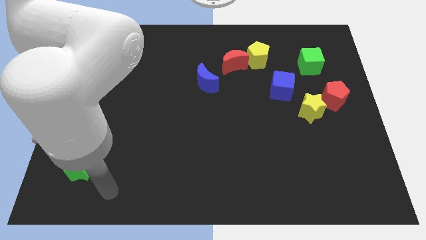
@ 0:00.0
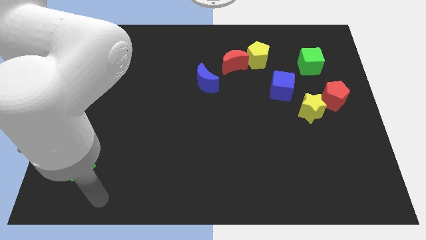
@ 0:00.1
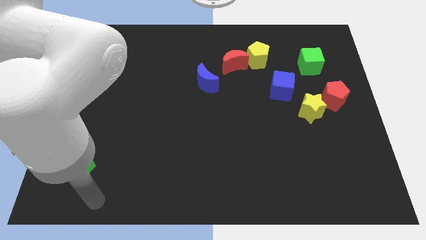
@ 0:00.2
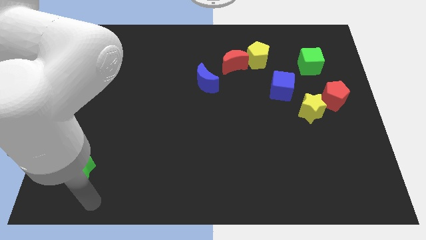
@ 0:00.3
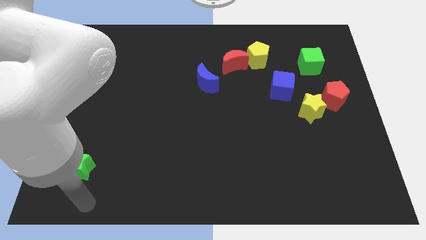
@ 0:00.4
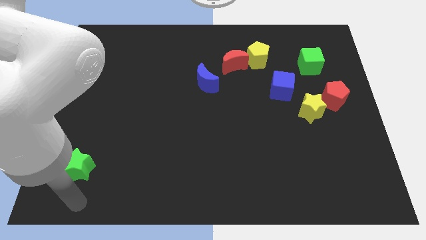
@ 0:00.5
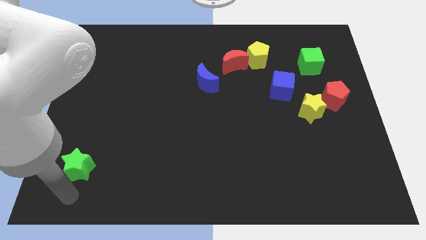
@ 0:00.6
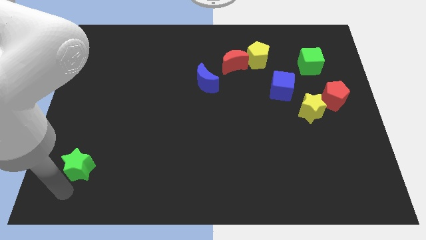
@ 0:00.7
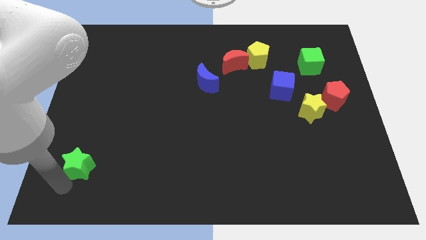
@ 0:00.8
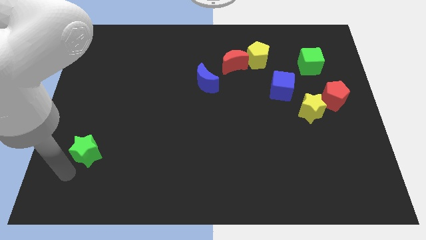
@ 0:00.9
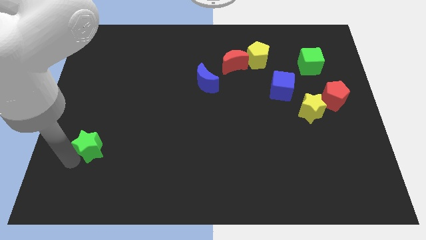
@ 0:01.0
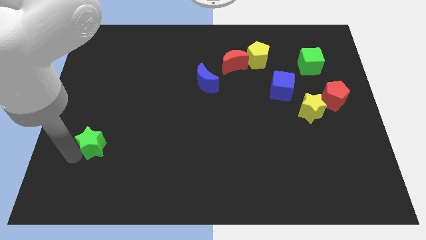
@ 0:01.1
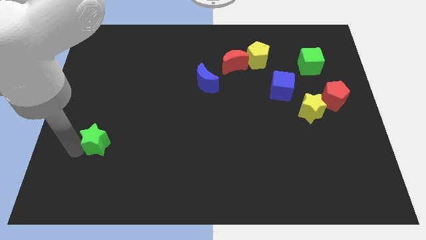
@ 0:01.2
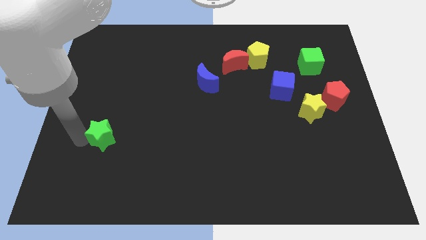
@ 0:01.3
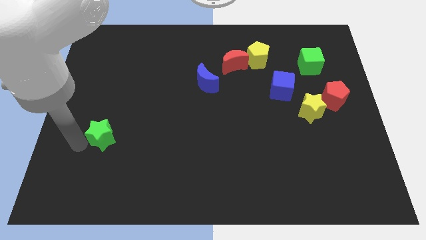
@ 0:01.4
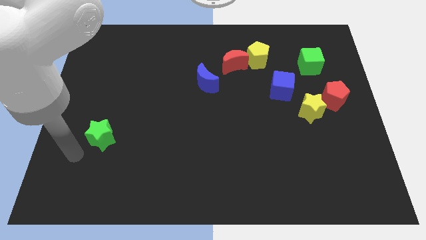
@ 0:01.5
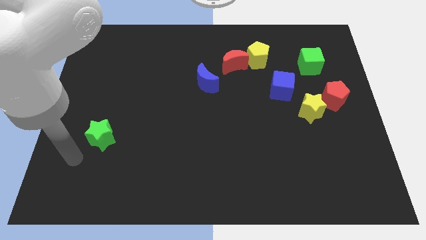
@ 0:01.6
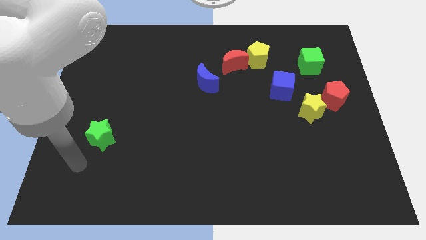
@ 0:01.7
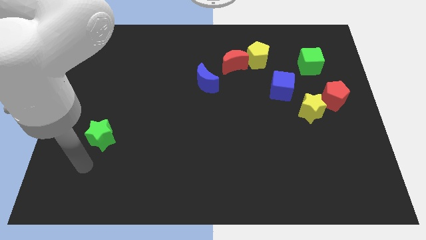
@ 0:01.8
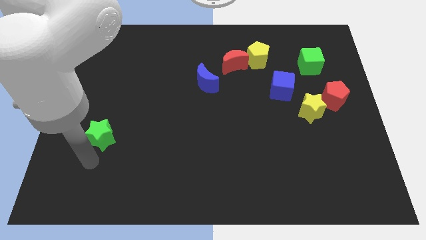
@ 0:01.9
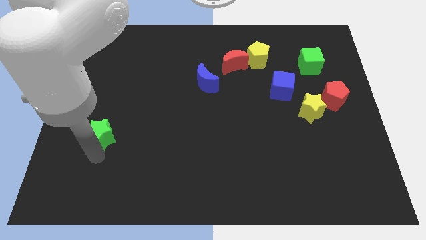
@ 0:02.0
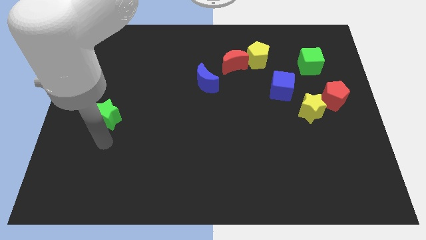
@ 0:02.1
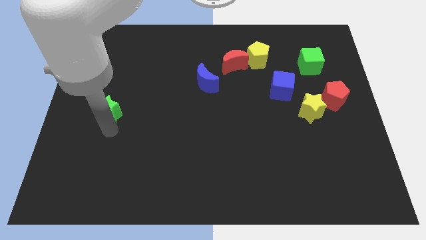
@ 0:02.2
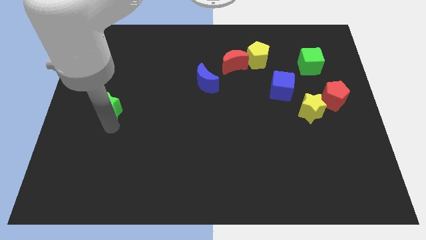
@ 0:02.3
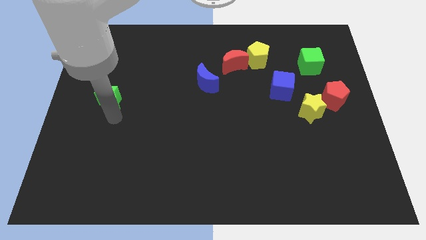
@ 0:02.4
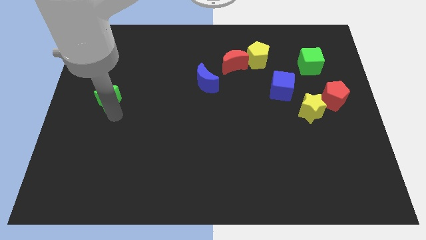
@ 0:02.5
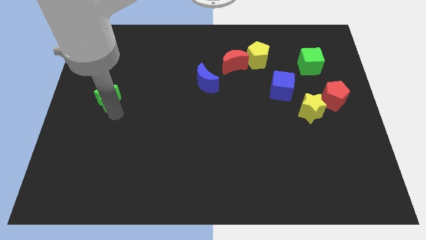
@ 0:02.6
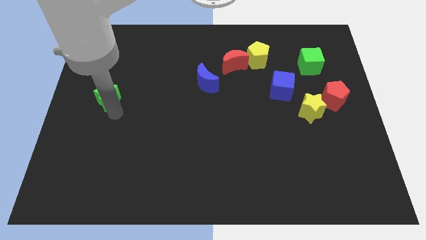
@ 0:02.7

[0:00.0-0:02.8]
push the green star to the left center of the board

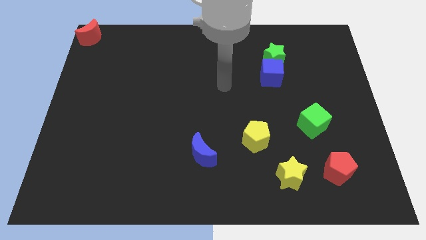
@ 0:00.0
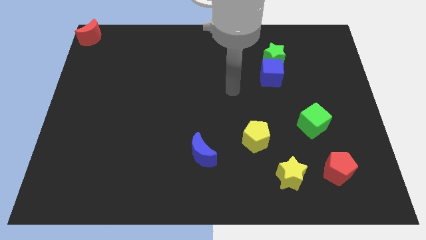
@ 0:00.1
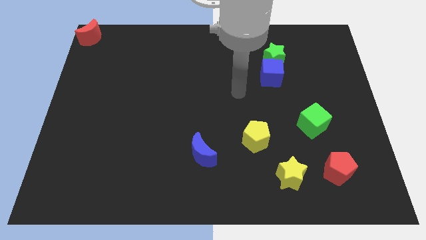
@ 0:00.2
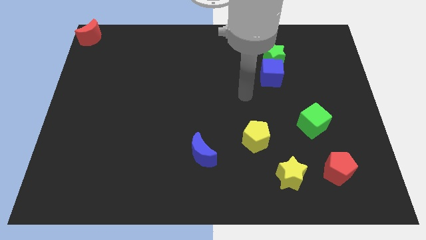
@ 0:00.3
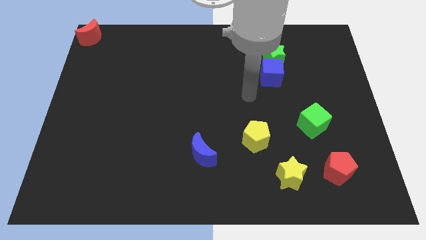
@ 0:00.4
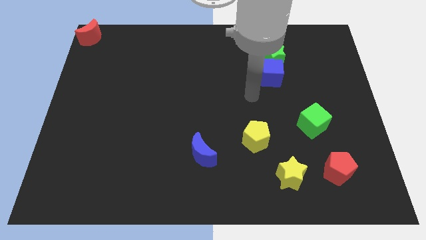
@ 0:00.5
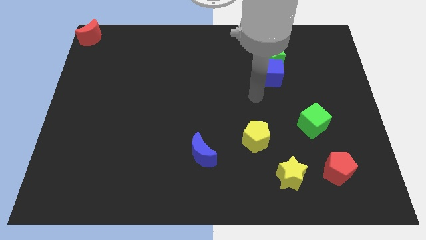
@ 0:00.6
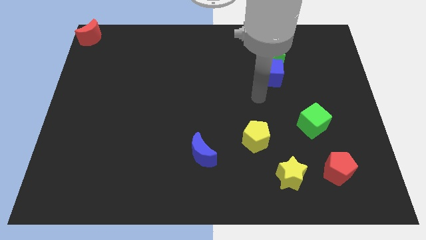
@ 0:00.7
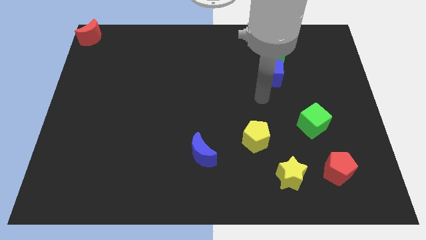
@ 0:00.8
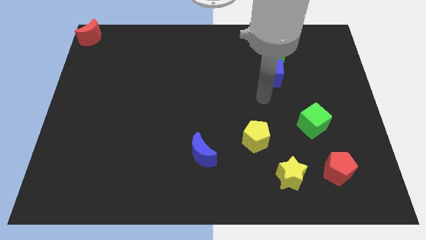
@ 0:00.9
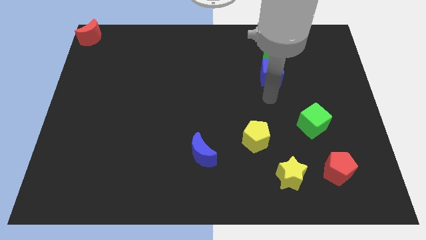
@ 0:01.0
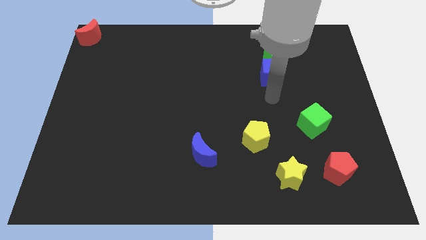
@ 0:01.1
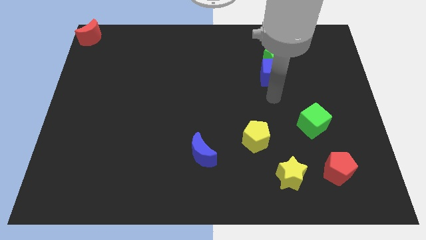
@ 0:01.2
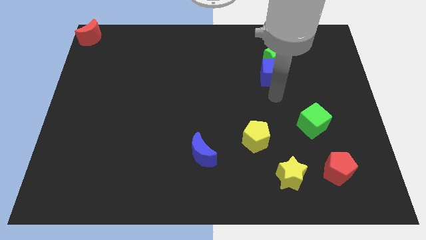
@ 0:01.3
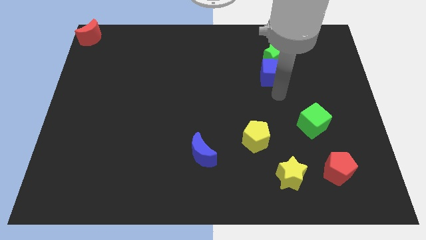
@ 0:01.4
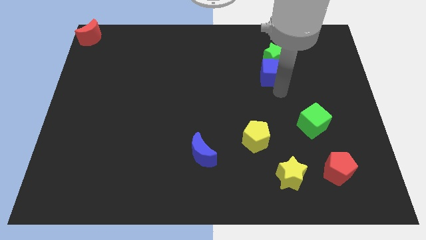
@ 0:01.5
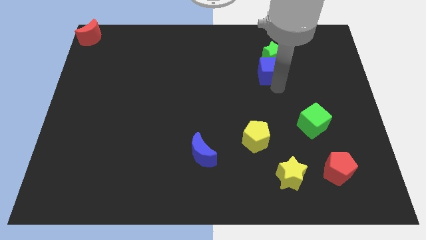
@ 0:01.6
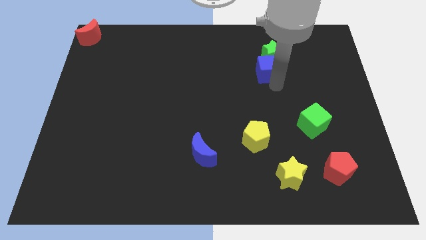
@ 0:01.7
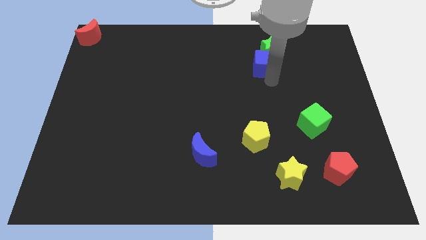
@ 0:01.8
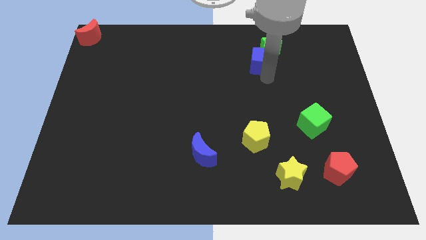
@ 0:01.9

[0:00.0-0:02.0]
move blue cube into green star

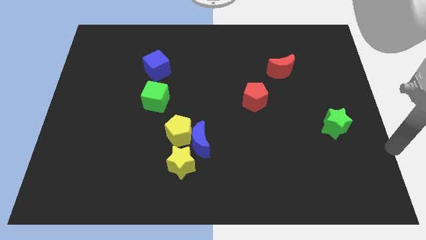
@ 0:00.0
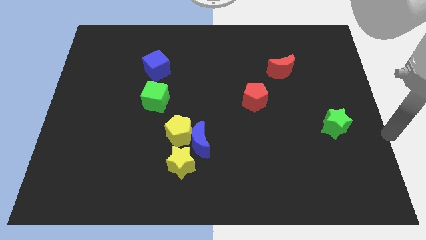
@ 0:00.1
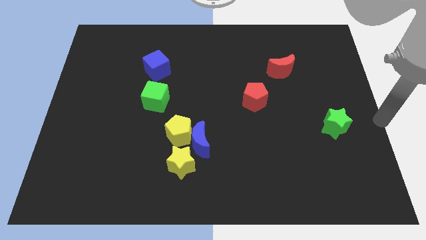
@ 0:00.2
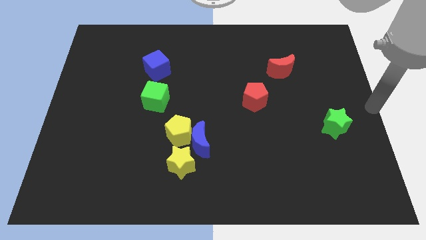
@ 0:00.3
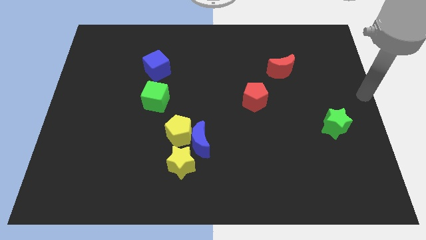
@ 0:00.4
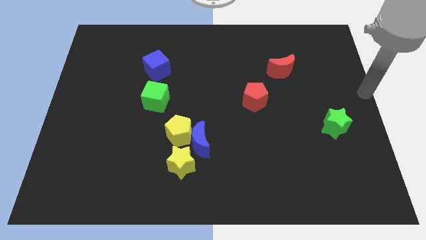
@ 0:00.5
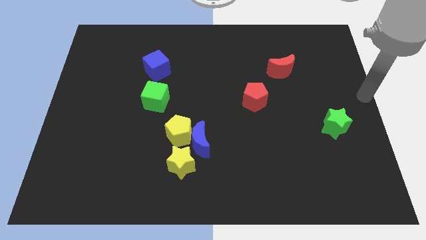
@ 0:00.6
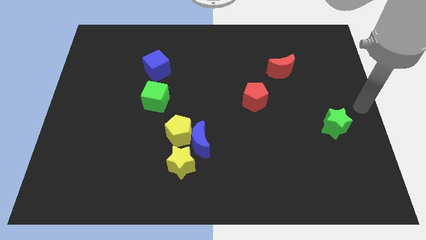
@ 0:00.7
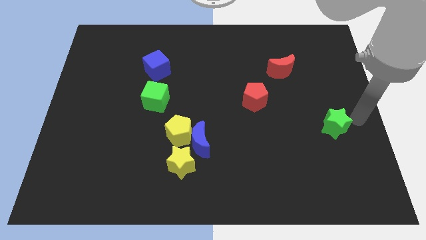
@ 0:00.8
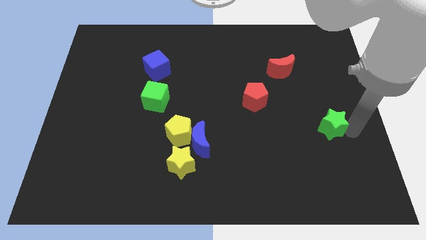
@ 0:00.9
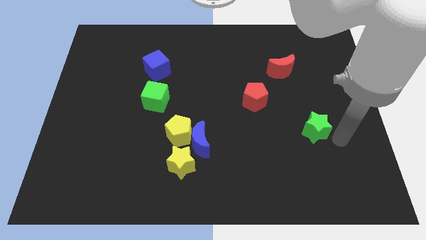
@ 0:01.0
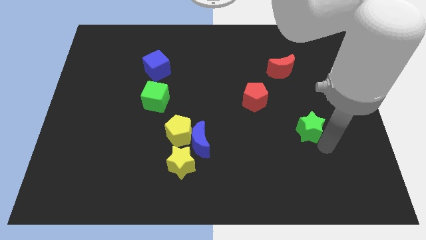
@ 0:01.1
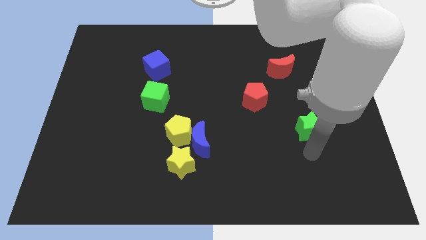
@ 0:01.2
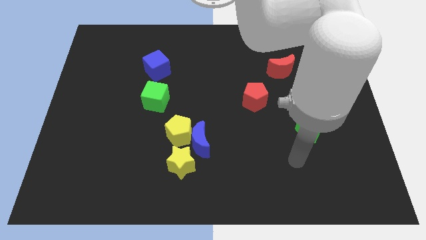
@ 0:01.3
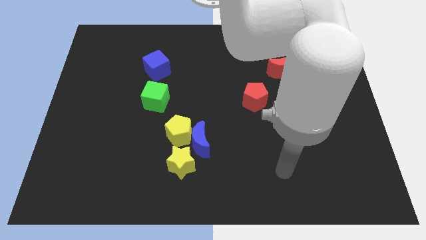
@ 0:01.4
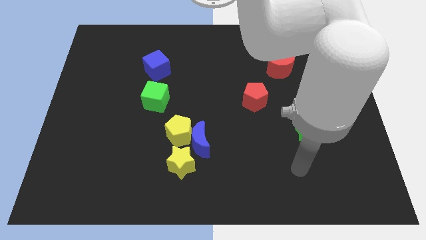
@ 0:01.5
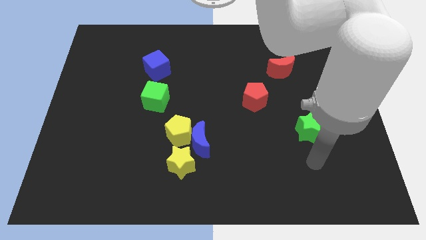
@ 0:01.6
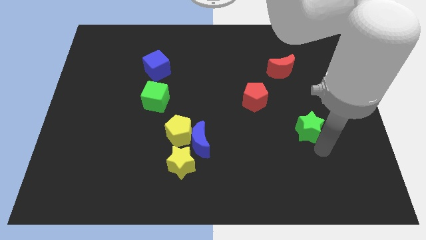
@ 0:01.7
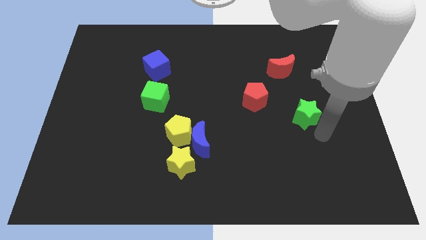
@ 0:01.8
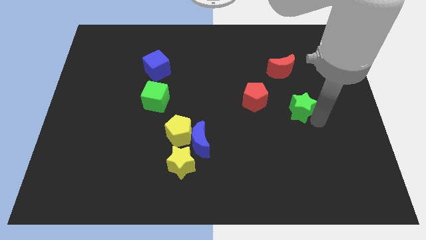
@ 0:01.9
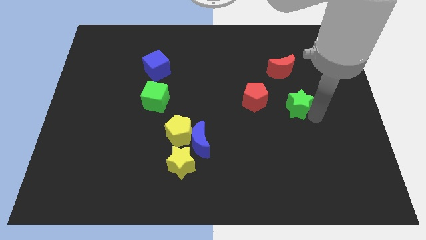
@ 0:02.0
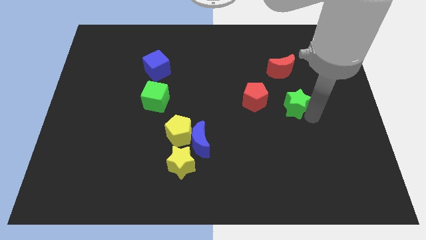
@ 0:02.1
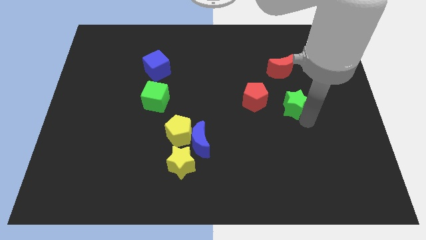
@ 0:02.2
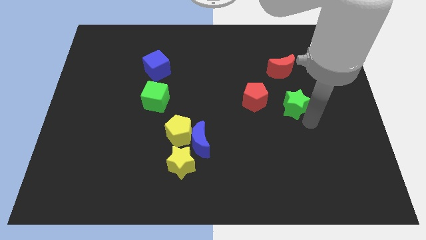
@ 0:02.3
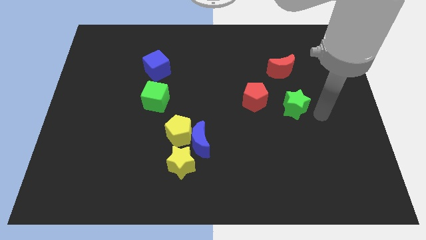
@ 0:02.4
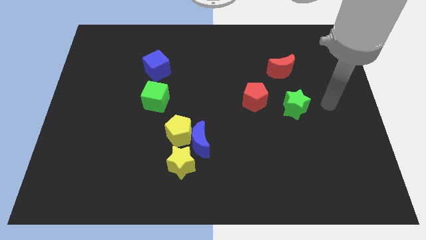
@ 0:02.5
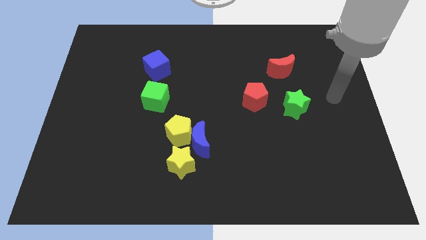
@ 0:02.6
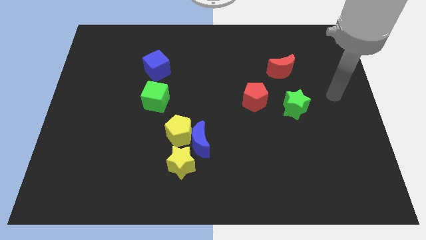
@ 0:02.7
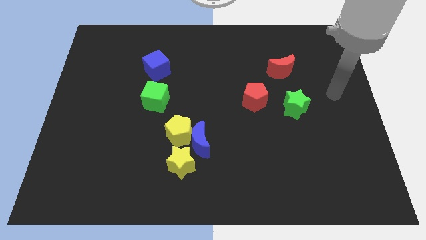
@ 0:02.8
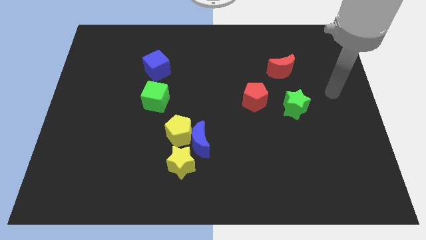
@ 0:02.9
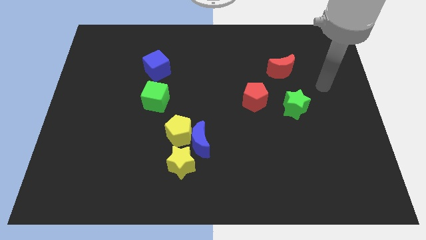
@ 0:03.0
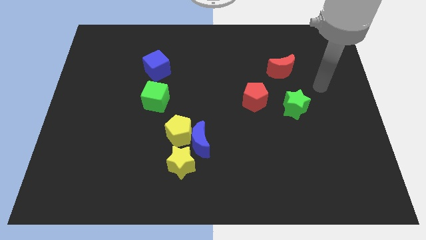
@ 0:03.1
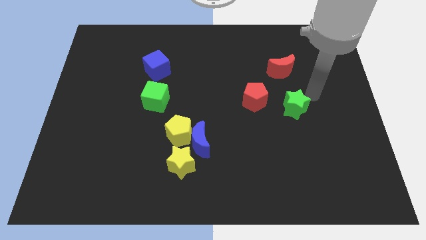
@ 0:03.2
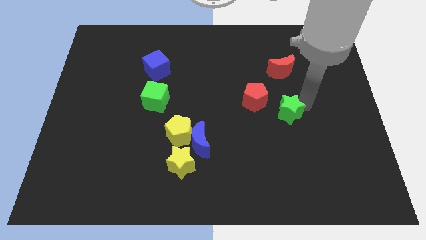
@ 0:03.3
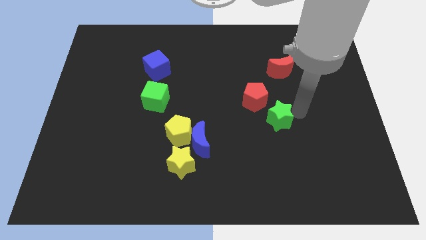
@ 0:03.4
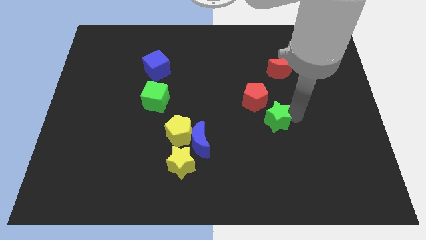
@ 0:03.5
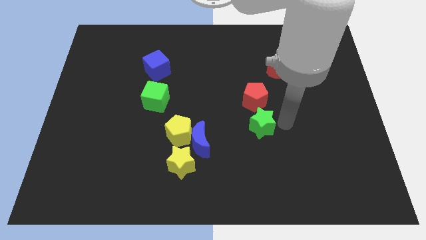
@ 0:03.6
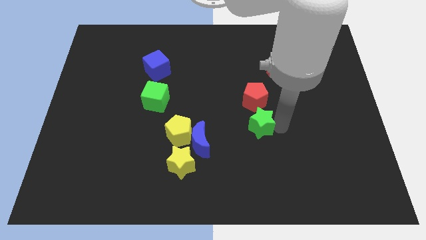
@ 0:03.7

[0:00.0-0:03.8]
place the green star below the red pentagon

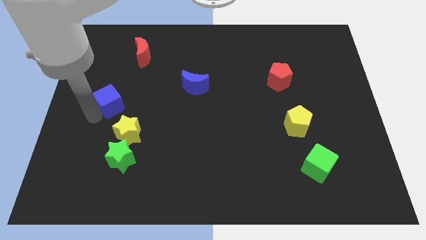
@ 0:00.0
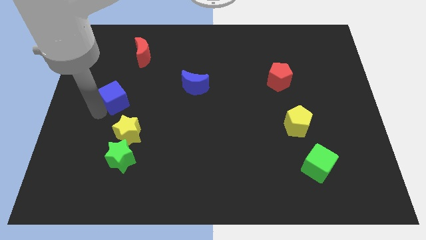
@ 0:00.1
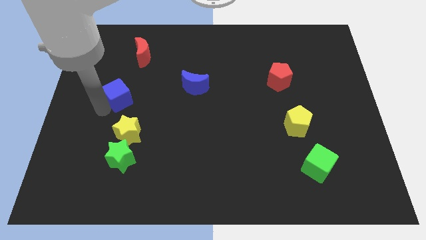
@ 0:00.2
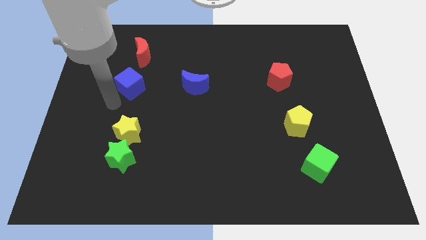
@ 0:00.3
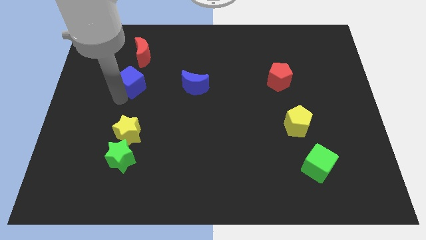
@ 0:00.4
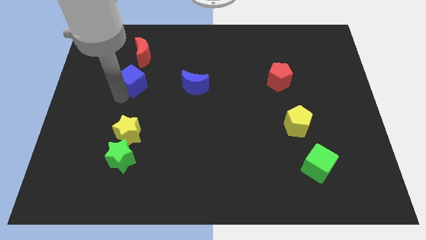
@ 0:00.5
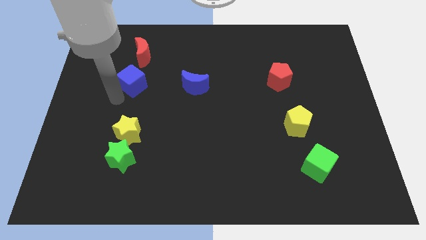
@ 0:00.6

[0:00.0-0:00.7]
move the blue cube below the red crescent
